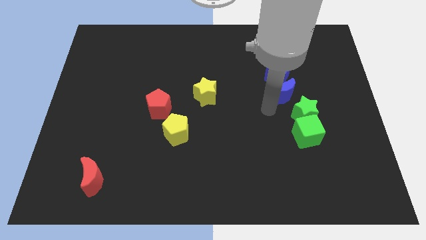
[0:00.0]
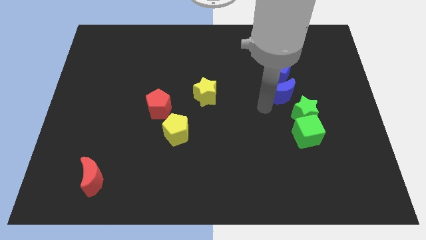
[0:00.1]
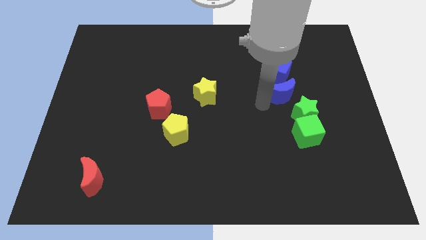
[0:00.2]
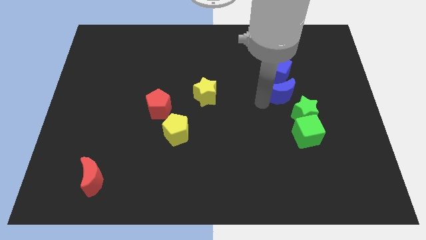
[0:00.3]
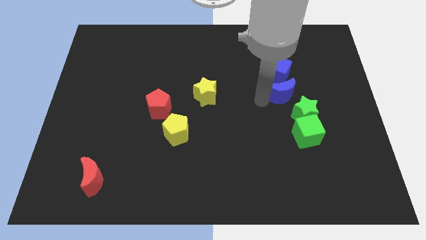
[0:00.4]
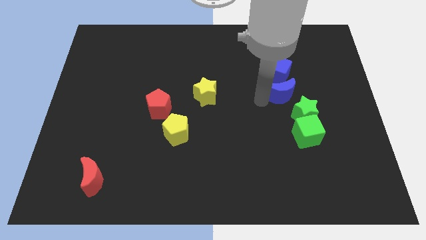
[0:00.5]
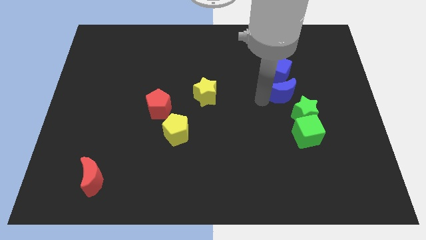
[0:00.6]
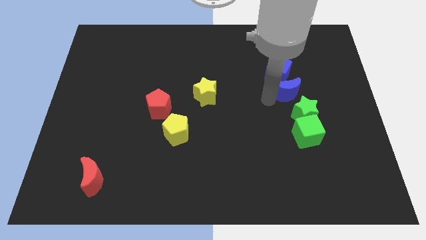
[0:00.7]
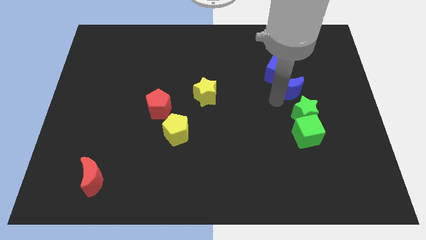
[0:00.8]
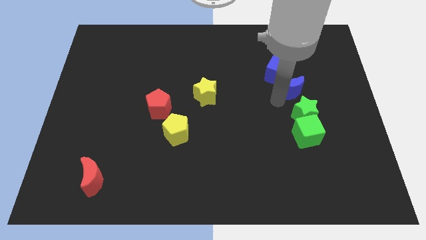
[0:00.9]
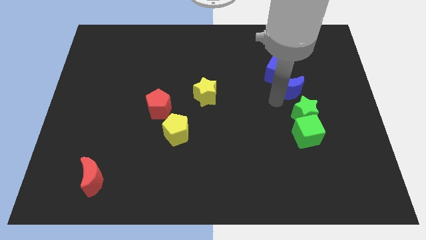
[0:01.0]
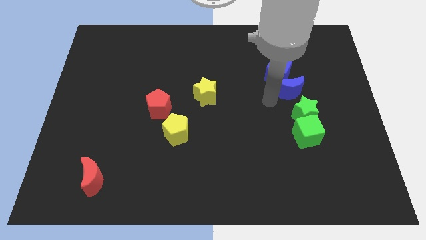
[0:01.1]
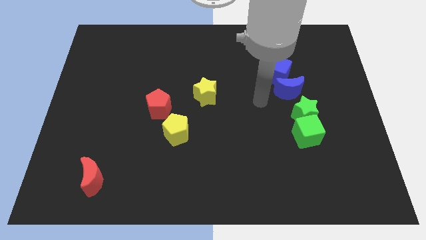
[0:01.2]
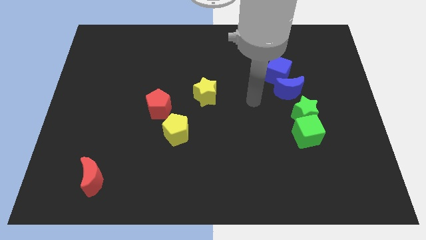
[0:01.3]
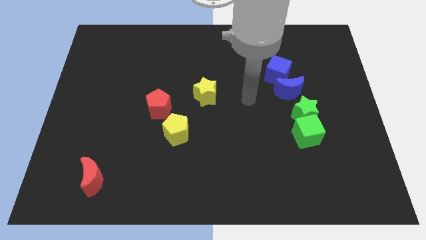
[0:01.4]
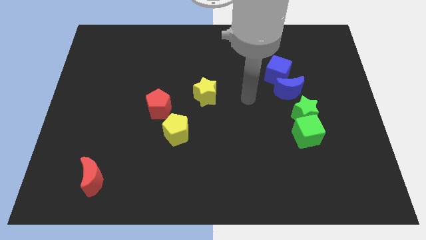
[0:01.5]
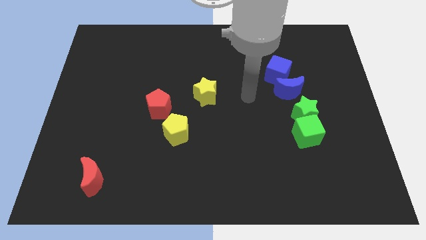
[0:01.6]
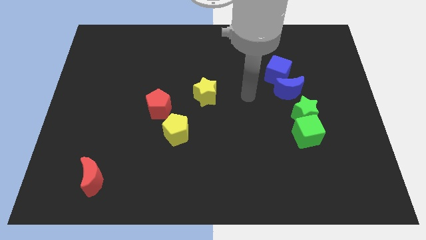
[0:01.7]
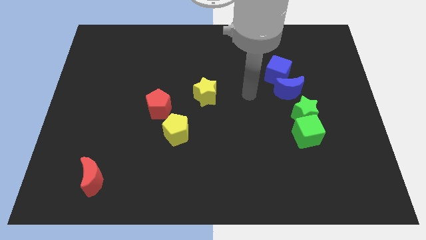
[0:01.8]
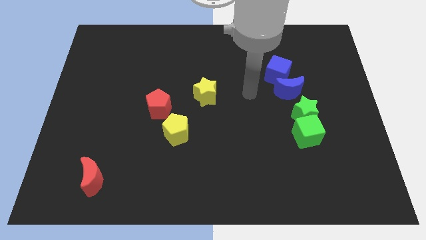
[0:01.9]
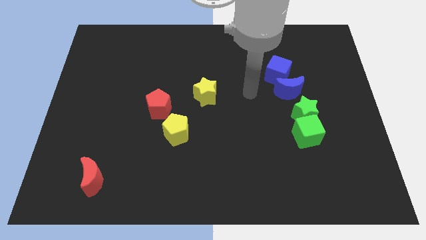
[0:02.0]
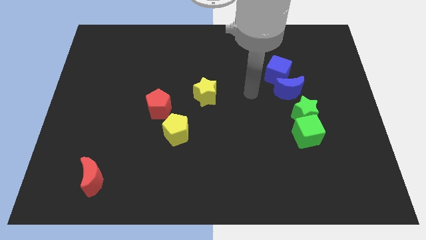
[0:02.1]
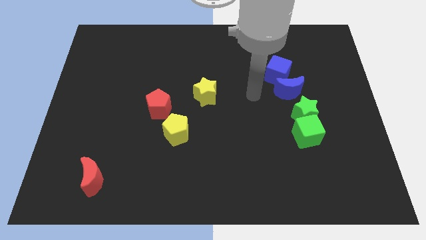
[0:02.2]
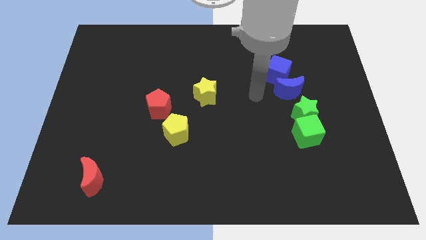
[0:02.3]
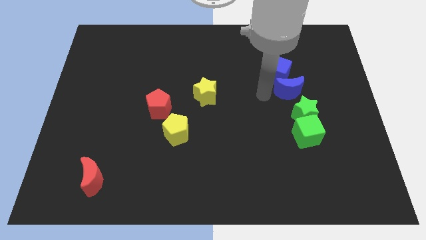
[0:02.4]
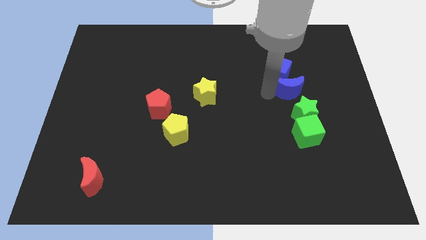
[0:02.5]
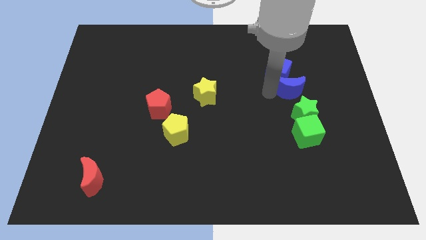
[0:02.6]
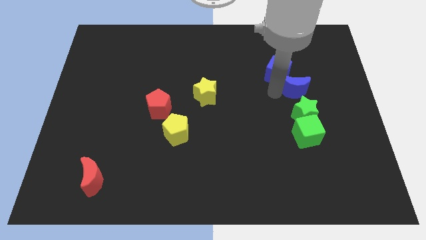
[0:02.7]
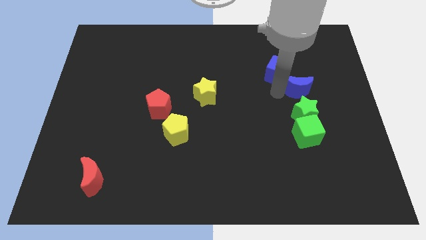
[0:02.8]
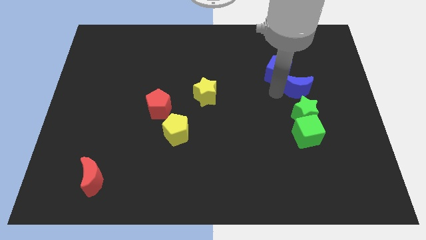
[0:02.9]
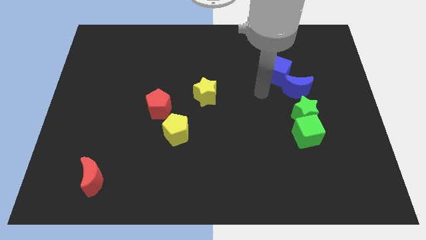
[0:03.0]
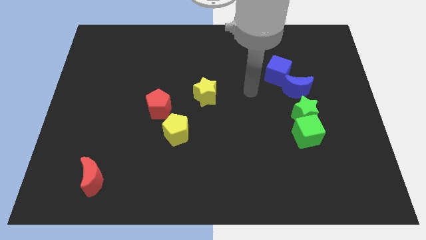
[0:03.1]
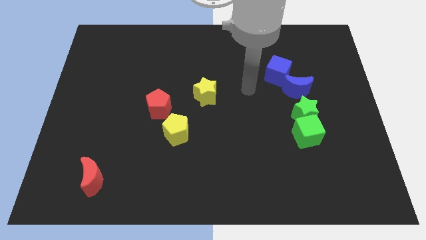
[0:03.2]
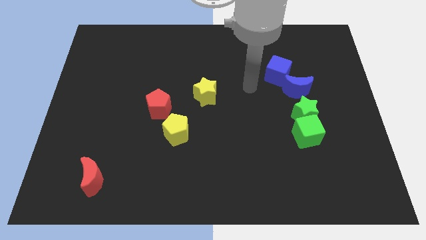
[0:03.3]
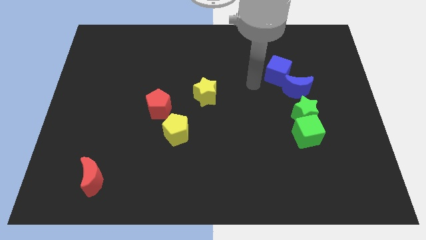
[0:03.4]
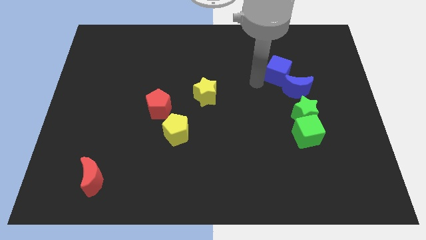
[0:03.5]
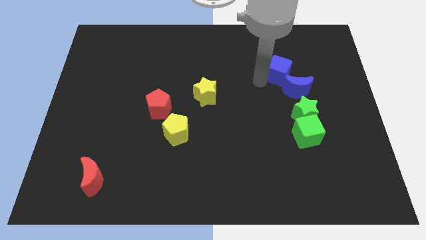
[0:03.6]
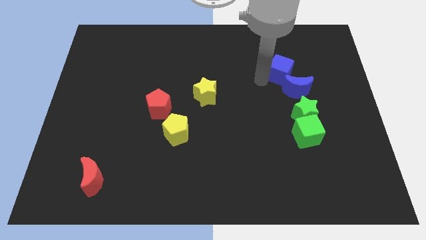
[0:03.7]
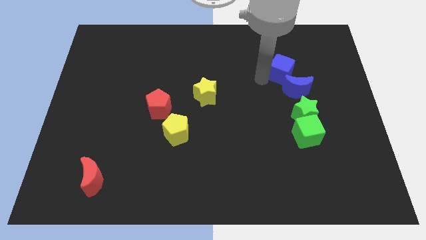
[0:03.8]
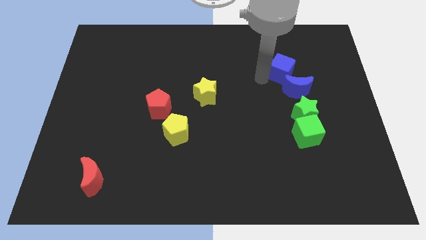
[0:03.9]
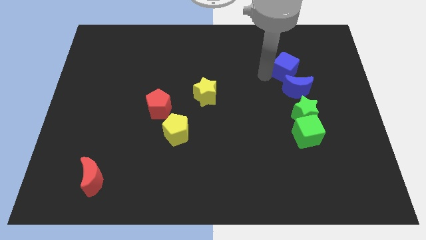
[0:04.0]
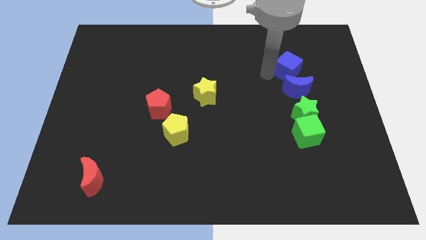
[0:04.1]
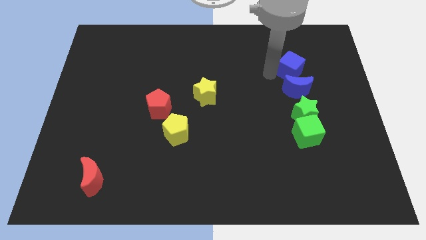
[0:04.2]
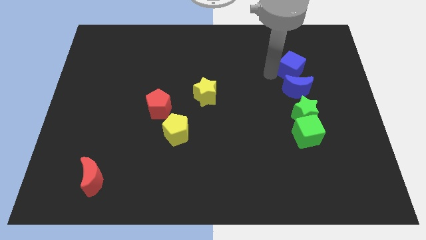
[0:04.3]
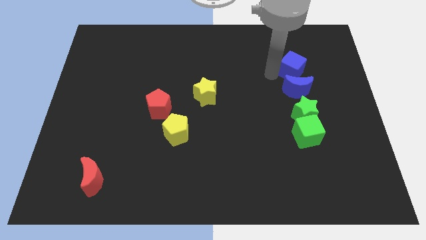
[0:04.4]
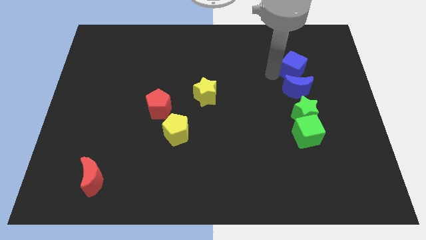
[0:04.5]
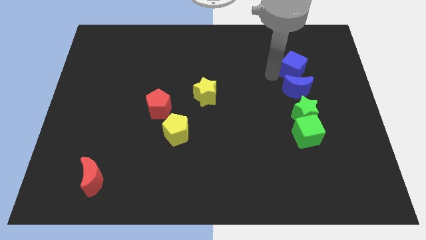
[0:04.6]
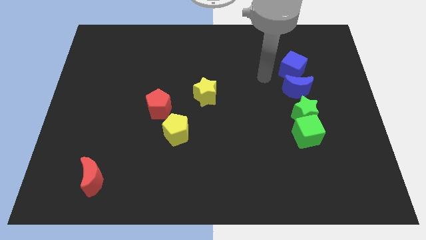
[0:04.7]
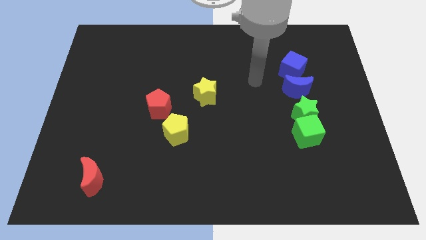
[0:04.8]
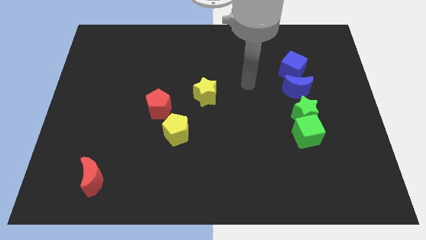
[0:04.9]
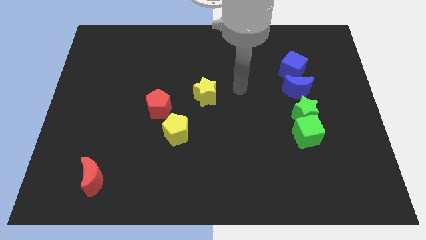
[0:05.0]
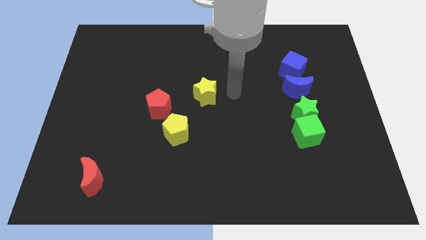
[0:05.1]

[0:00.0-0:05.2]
push the blue moon and blue block to the top side of the green star

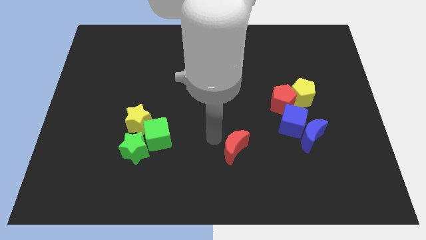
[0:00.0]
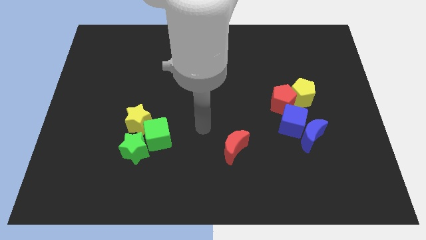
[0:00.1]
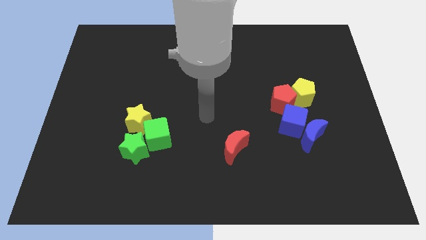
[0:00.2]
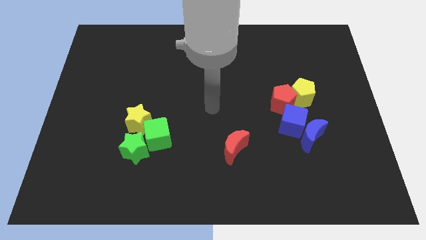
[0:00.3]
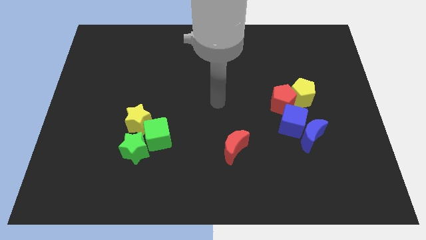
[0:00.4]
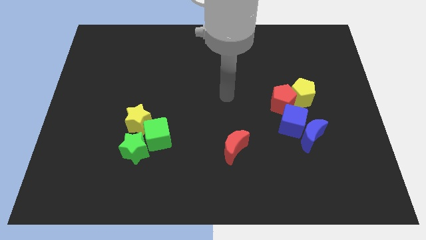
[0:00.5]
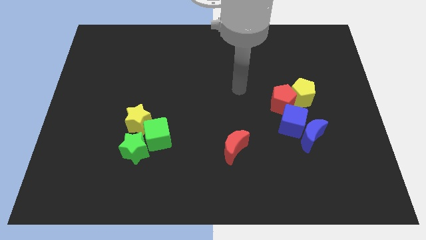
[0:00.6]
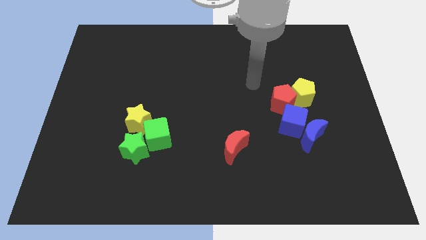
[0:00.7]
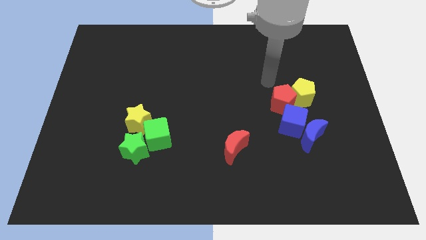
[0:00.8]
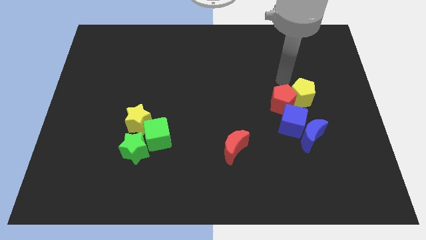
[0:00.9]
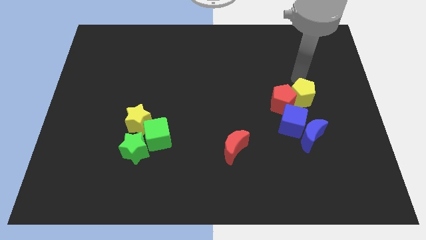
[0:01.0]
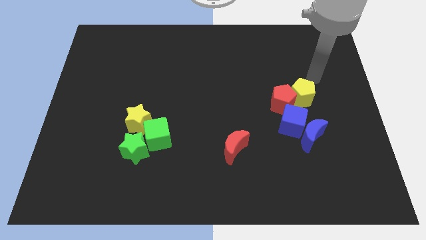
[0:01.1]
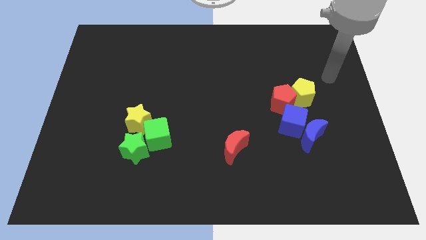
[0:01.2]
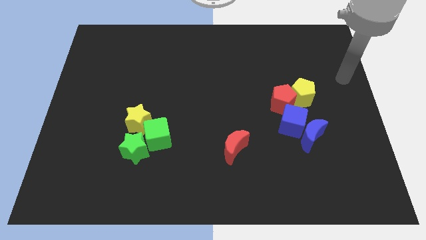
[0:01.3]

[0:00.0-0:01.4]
drag your arm away from the red moon

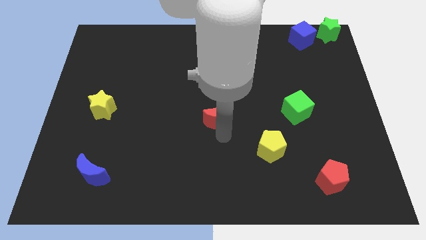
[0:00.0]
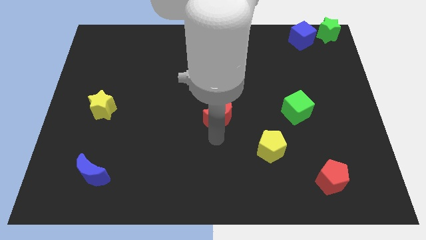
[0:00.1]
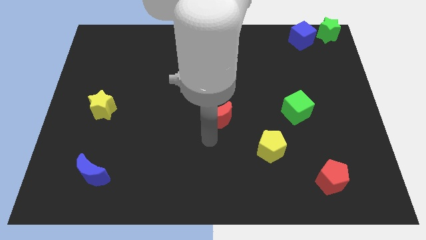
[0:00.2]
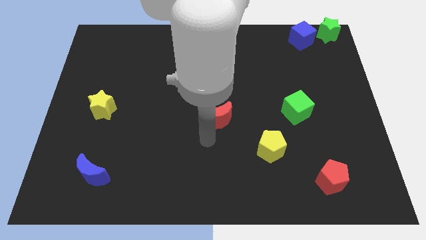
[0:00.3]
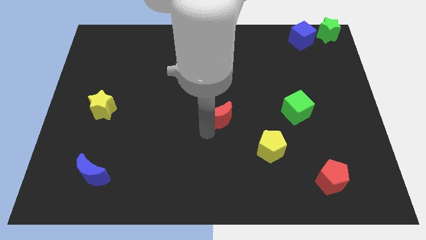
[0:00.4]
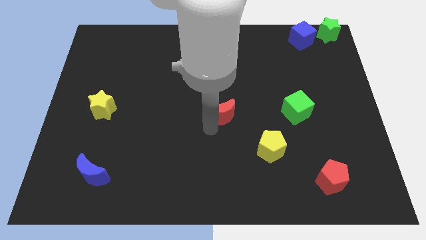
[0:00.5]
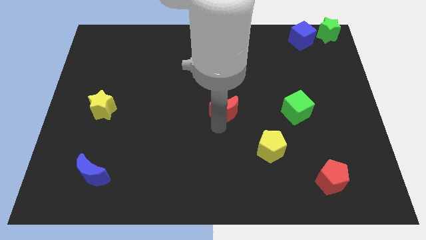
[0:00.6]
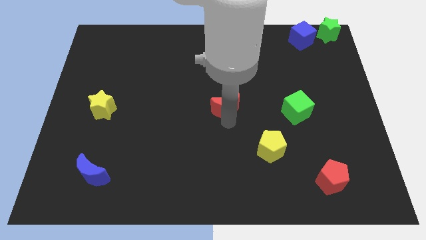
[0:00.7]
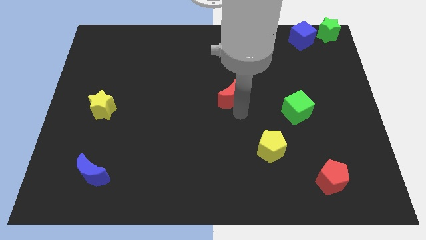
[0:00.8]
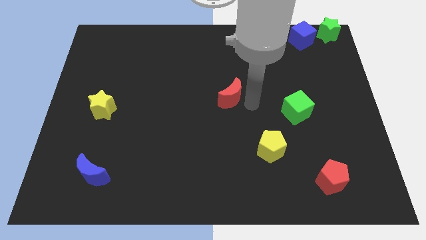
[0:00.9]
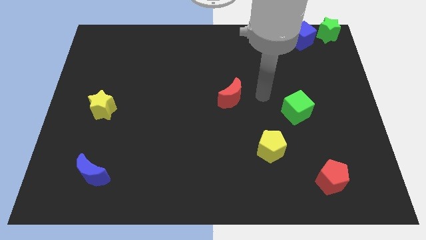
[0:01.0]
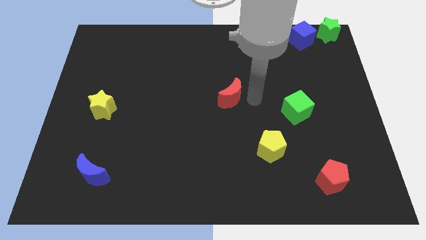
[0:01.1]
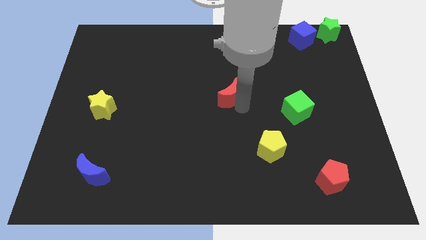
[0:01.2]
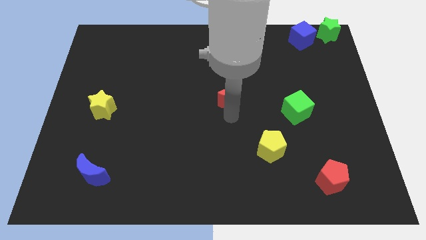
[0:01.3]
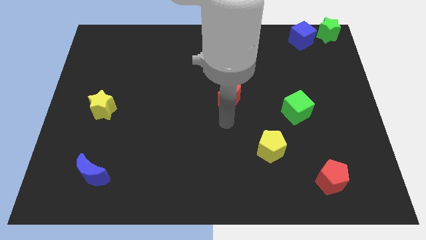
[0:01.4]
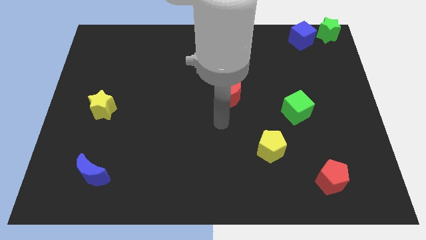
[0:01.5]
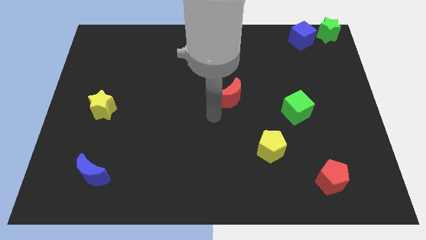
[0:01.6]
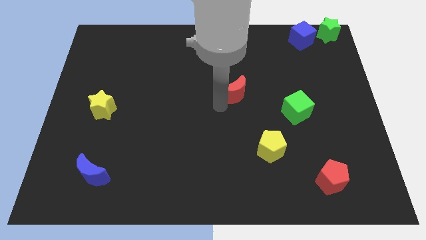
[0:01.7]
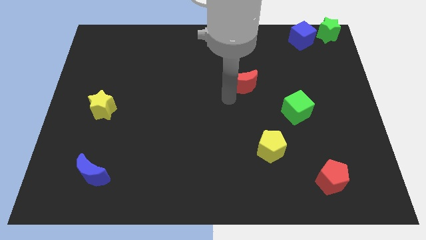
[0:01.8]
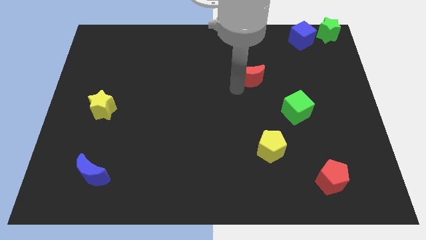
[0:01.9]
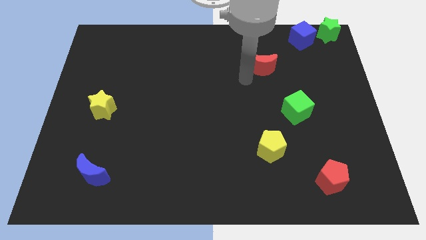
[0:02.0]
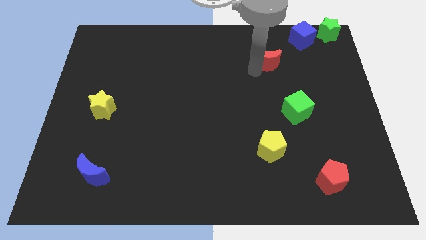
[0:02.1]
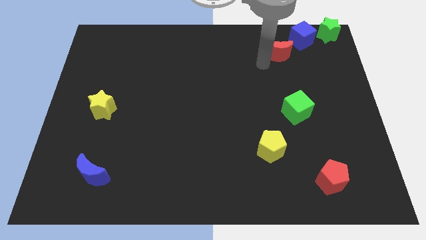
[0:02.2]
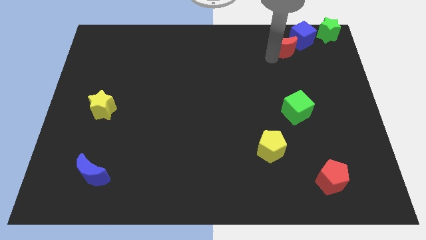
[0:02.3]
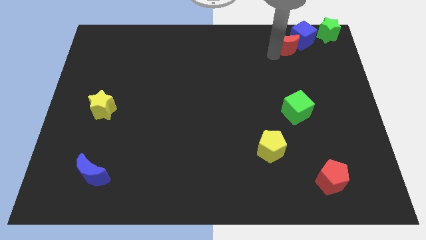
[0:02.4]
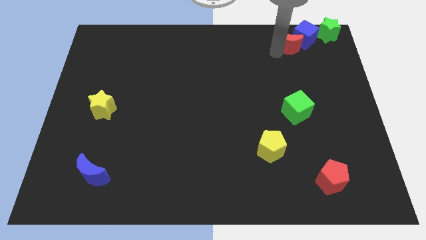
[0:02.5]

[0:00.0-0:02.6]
place red crescent above green cube
